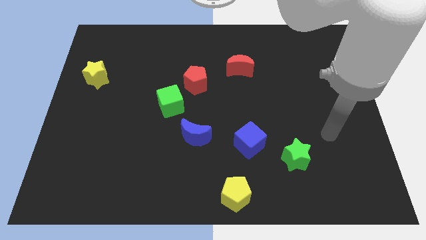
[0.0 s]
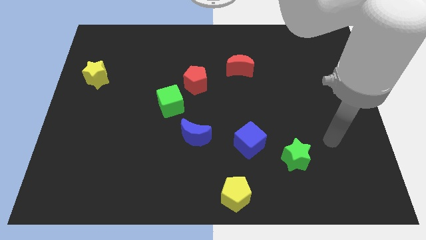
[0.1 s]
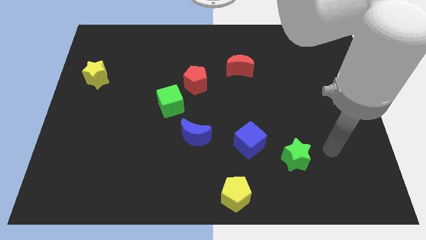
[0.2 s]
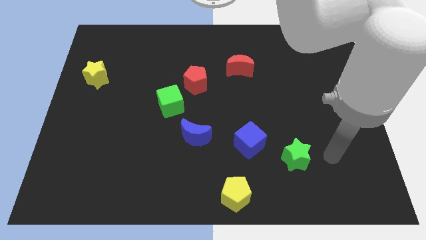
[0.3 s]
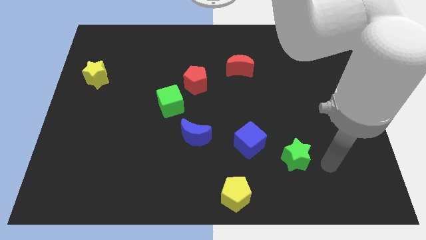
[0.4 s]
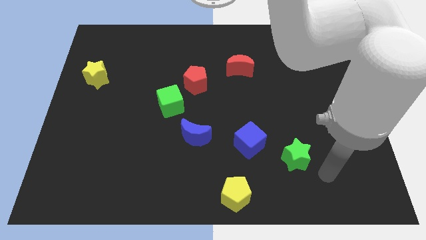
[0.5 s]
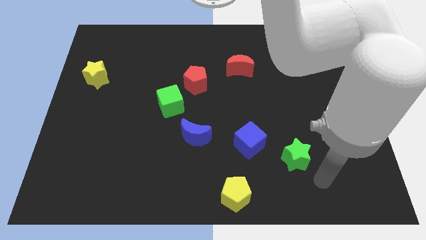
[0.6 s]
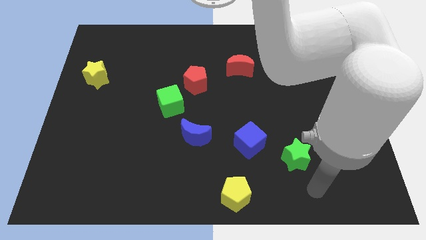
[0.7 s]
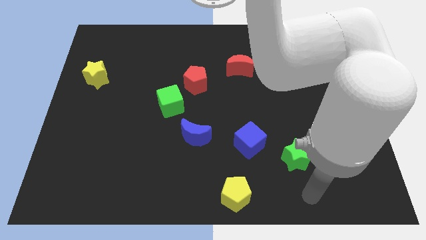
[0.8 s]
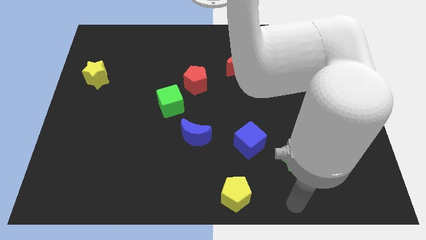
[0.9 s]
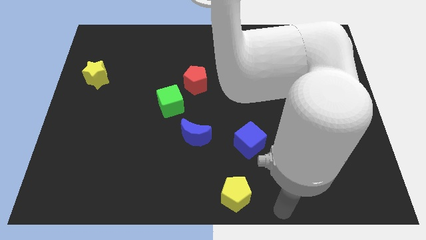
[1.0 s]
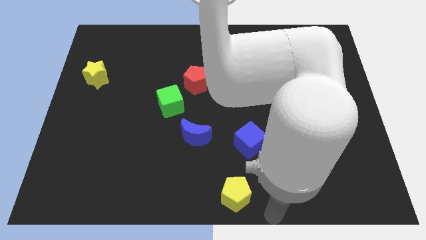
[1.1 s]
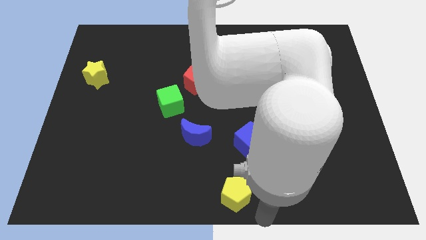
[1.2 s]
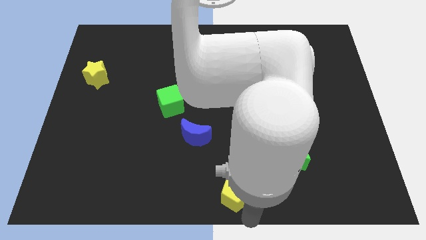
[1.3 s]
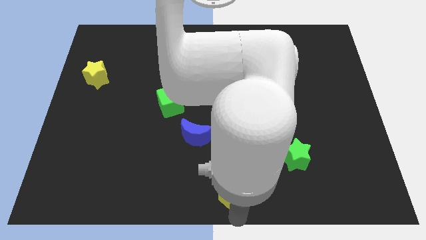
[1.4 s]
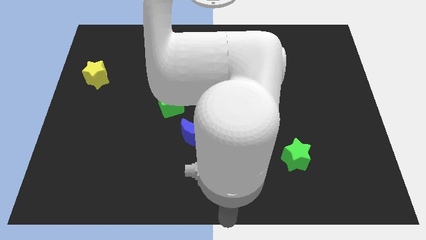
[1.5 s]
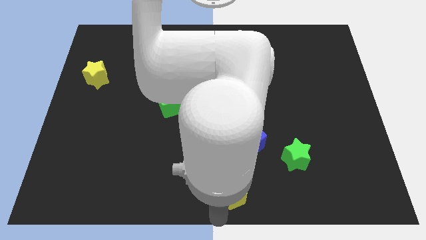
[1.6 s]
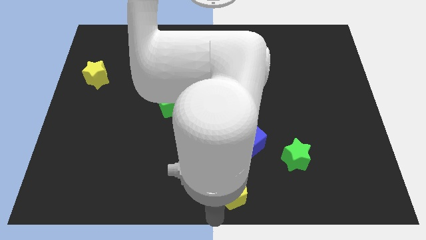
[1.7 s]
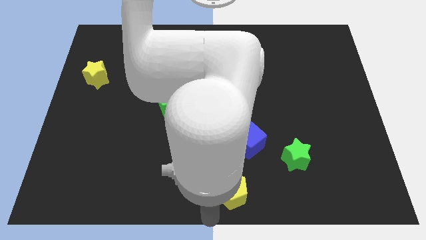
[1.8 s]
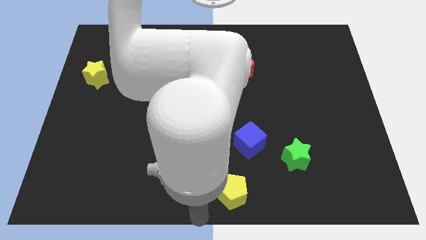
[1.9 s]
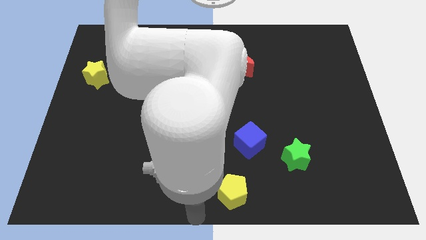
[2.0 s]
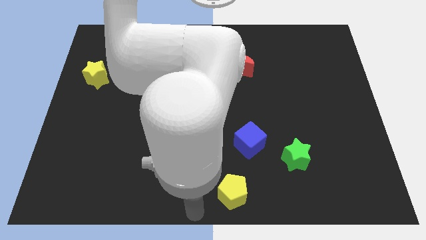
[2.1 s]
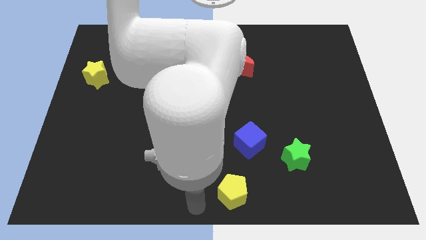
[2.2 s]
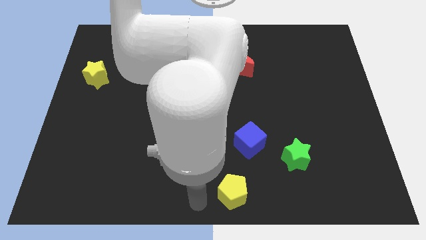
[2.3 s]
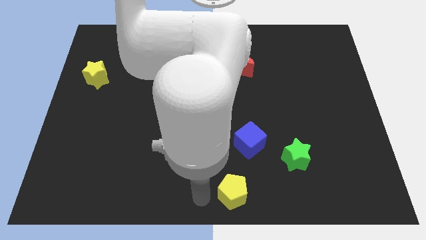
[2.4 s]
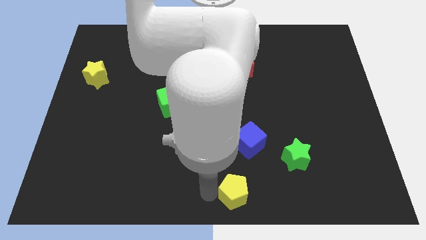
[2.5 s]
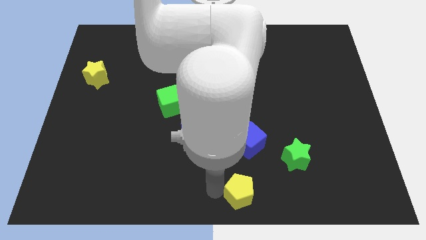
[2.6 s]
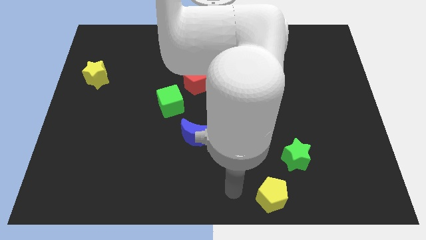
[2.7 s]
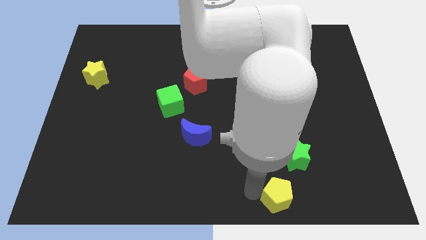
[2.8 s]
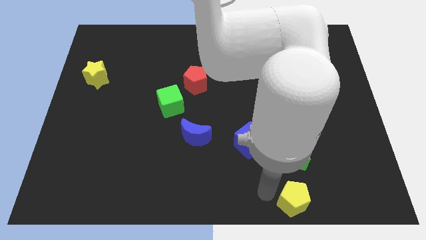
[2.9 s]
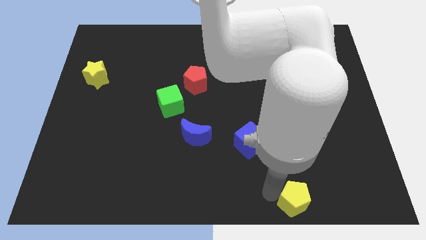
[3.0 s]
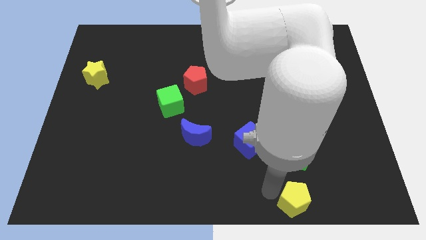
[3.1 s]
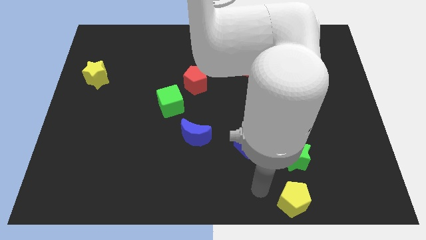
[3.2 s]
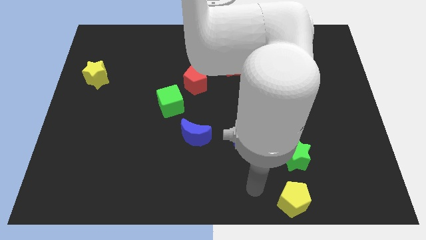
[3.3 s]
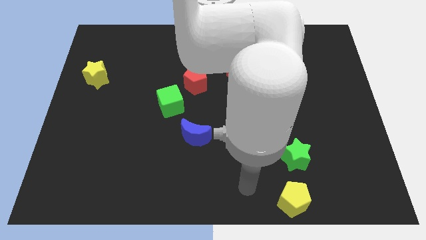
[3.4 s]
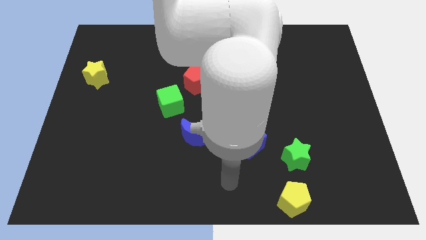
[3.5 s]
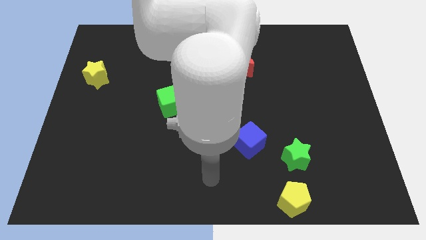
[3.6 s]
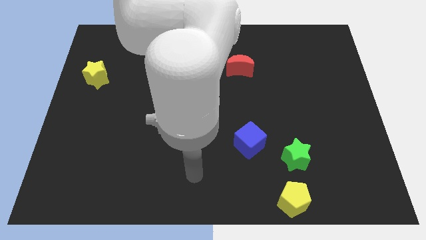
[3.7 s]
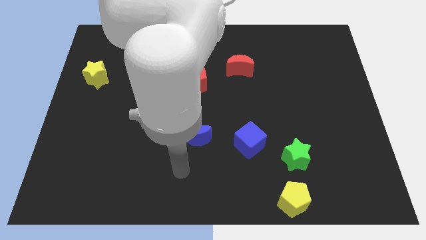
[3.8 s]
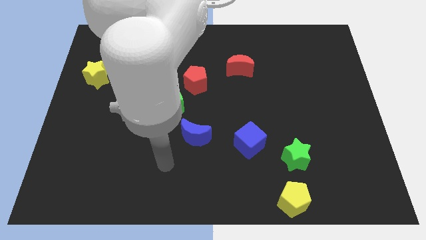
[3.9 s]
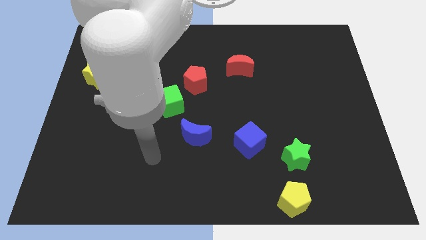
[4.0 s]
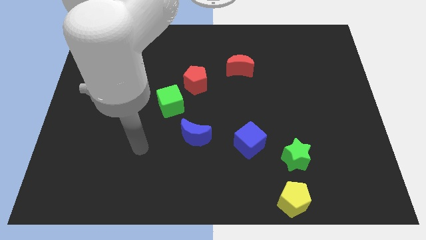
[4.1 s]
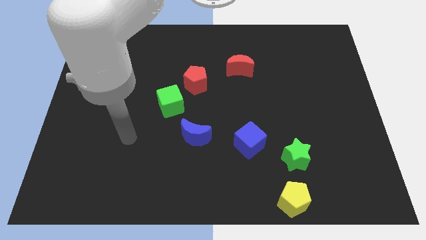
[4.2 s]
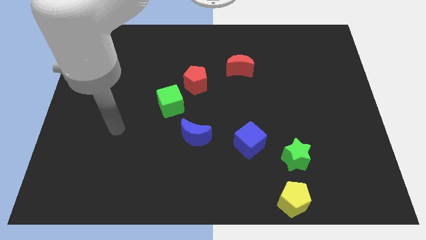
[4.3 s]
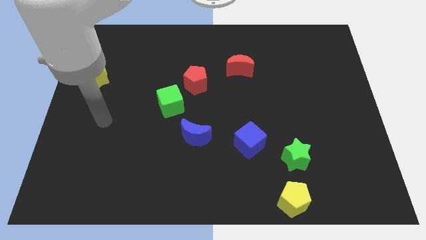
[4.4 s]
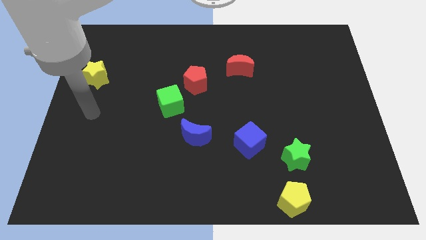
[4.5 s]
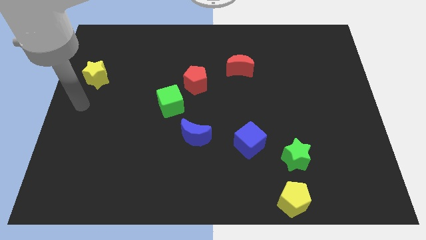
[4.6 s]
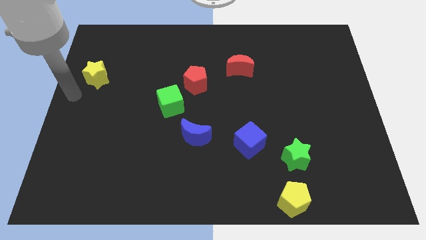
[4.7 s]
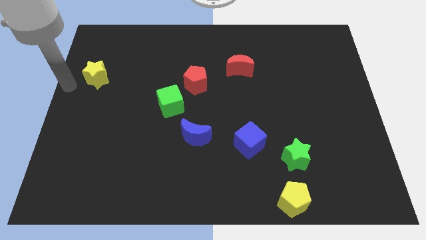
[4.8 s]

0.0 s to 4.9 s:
place the yellow pentagon below the green star

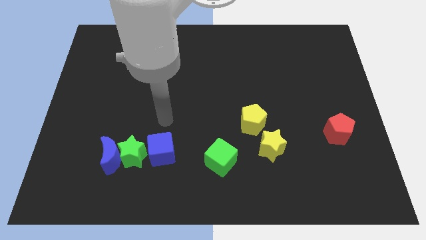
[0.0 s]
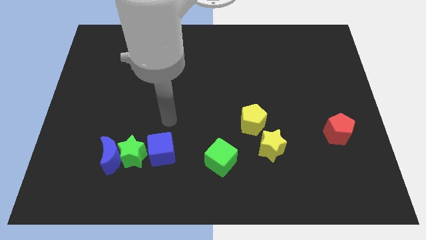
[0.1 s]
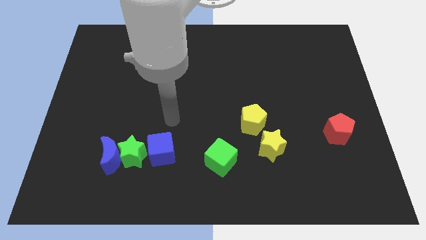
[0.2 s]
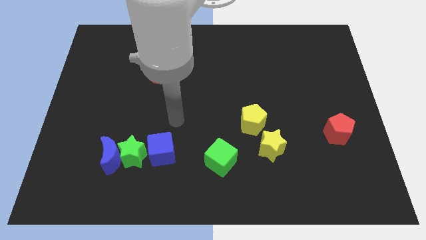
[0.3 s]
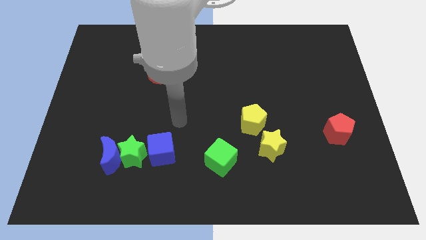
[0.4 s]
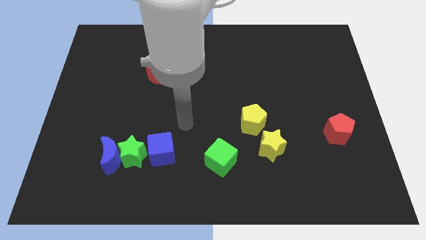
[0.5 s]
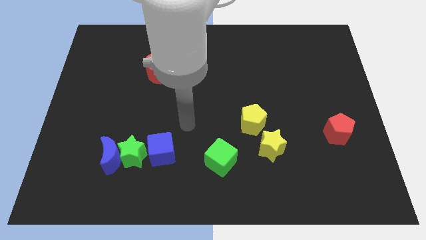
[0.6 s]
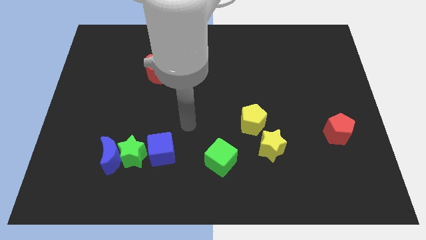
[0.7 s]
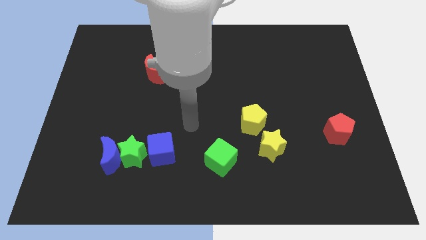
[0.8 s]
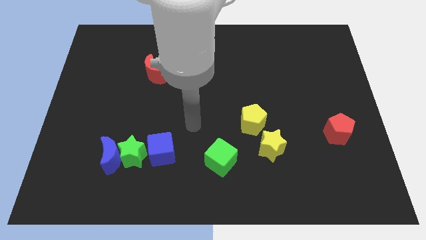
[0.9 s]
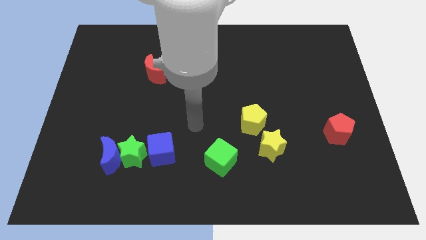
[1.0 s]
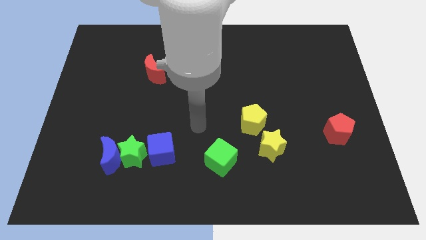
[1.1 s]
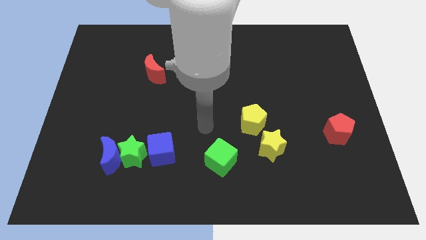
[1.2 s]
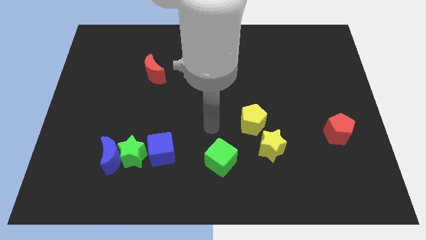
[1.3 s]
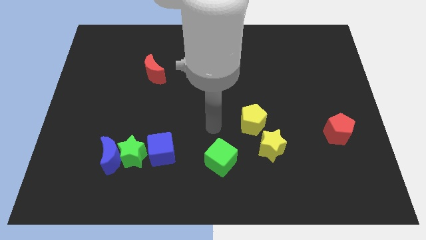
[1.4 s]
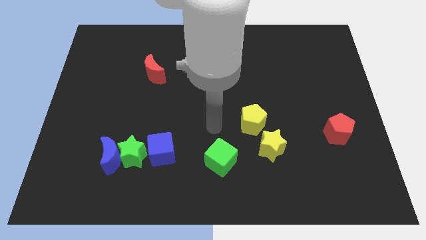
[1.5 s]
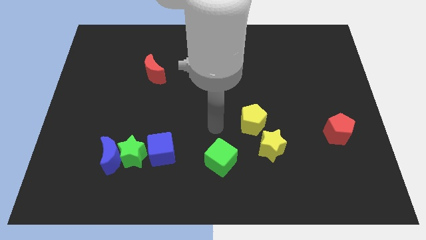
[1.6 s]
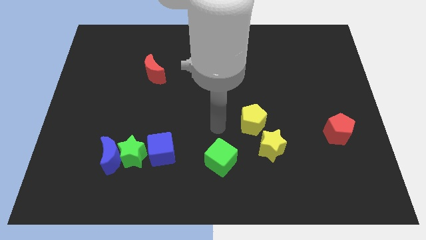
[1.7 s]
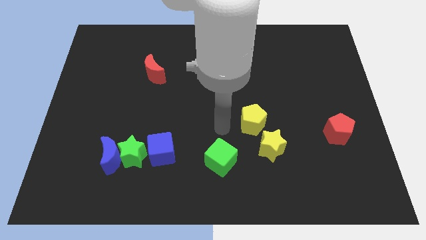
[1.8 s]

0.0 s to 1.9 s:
move the arm to the top of the green cube

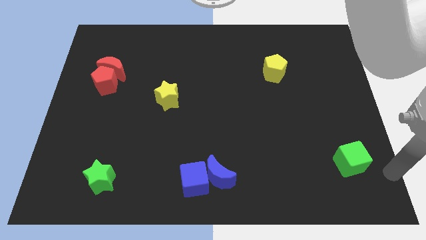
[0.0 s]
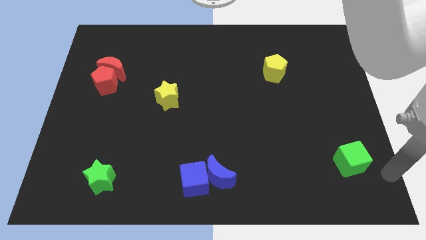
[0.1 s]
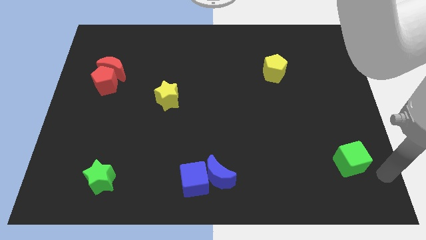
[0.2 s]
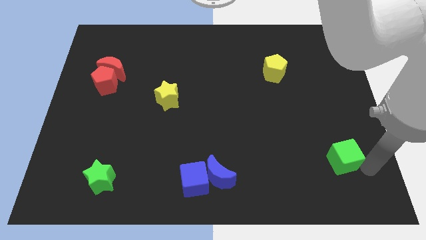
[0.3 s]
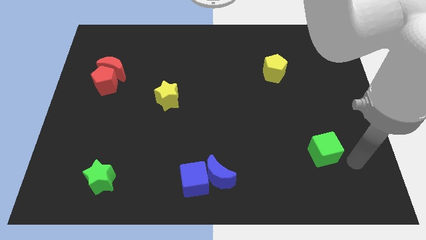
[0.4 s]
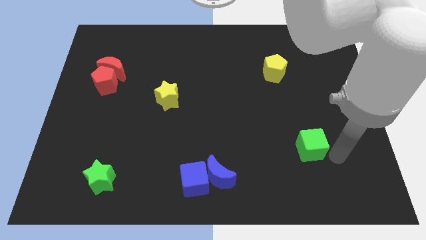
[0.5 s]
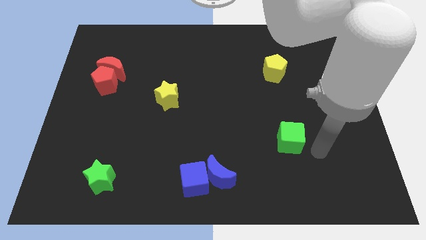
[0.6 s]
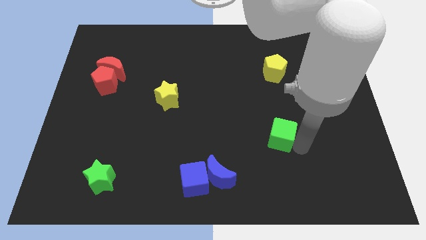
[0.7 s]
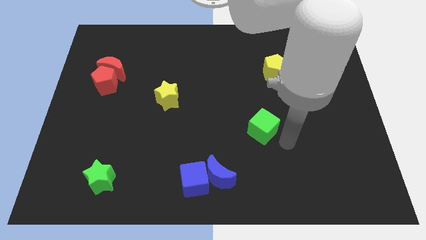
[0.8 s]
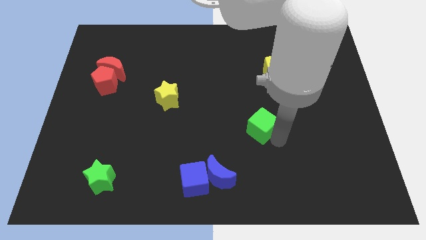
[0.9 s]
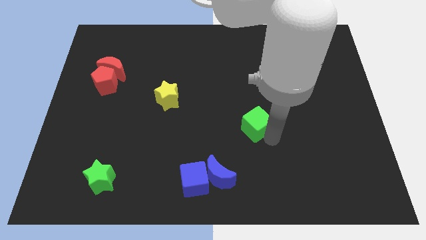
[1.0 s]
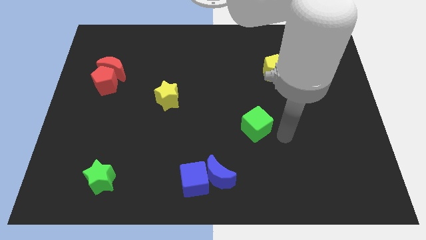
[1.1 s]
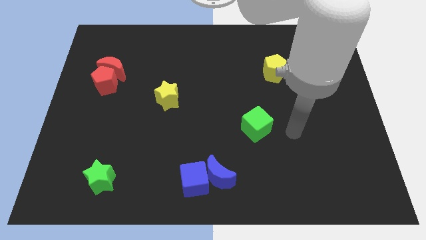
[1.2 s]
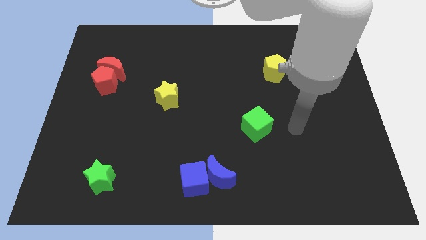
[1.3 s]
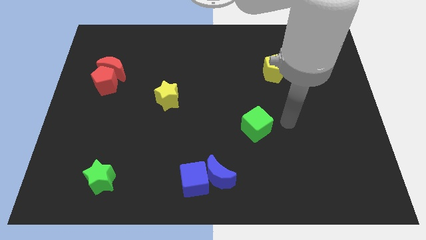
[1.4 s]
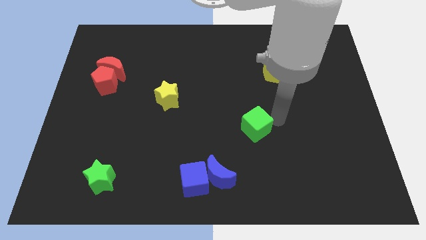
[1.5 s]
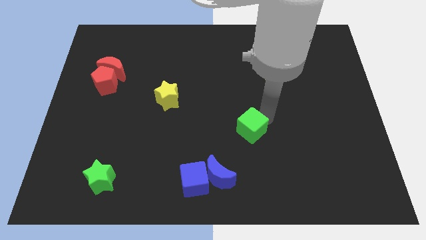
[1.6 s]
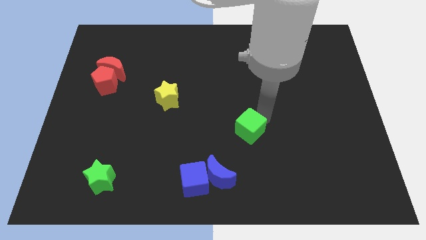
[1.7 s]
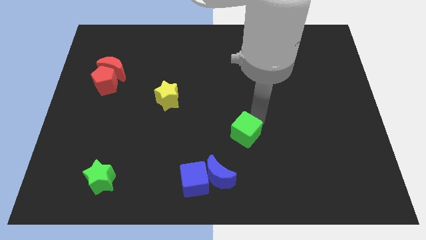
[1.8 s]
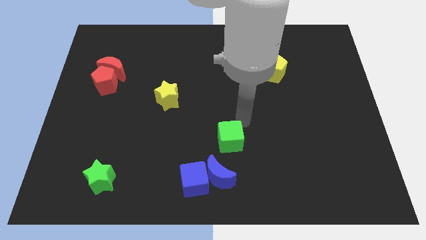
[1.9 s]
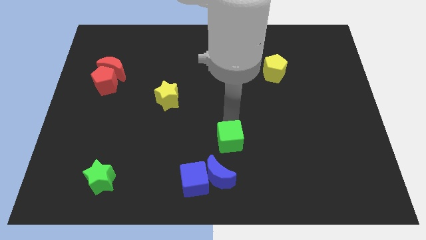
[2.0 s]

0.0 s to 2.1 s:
push the green cube diagonally to yellow star

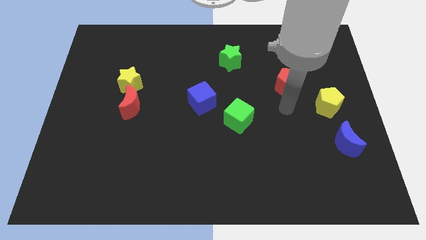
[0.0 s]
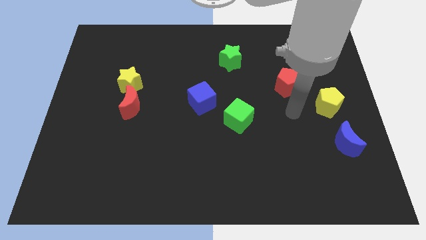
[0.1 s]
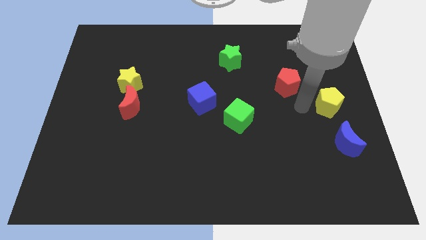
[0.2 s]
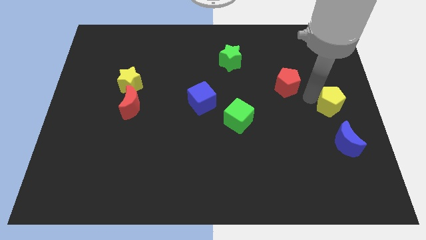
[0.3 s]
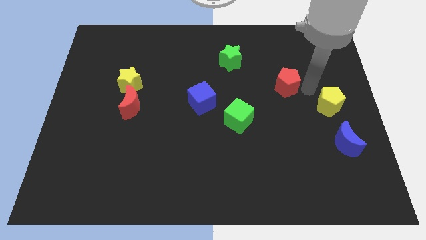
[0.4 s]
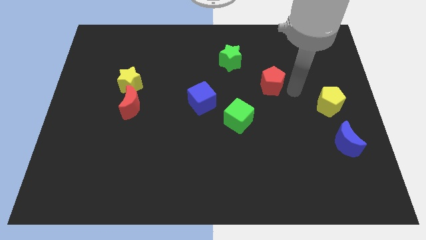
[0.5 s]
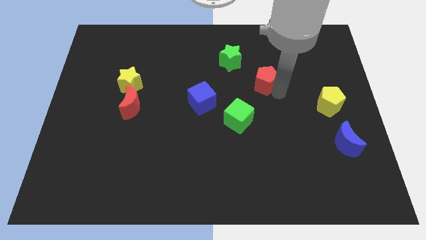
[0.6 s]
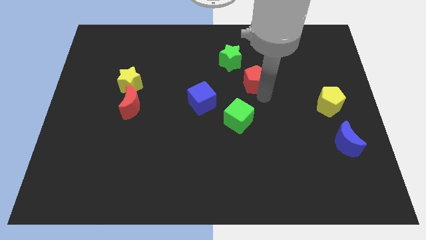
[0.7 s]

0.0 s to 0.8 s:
move the red pentagon towards the center of the board
